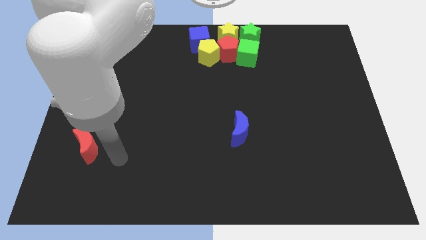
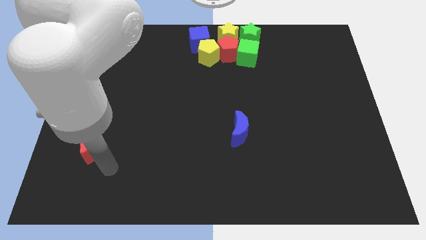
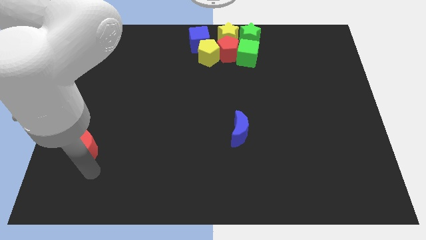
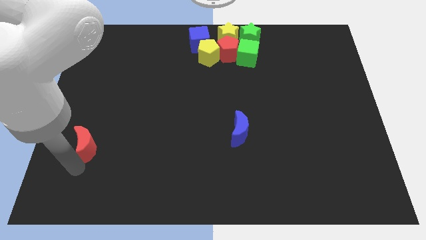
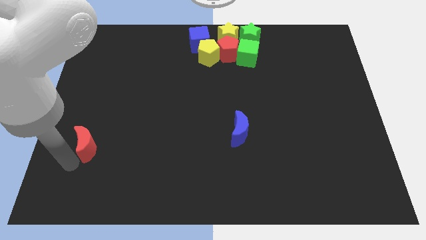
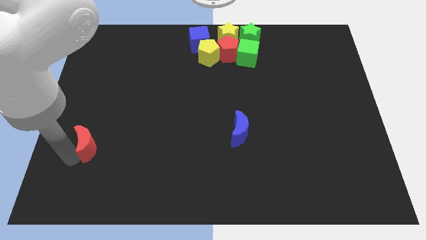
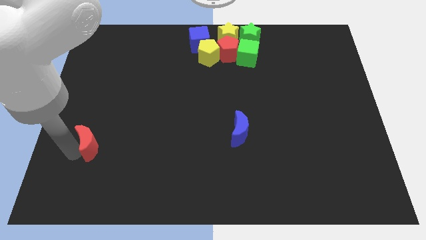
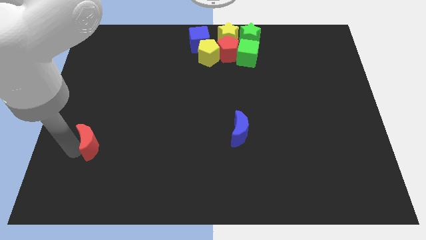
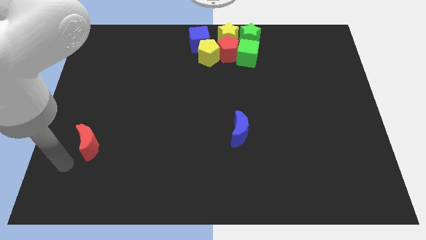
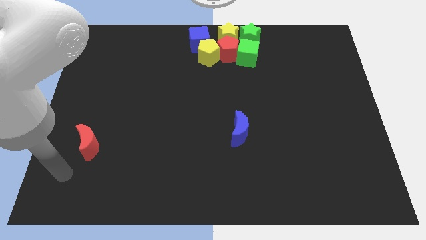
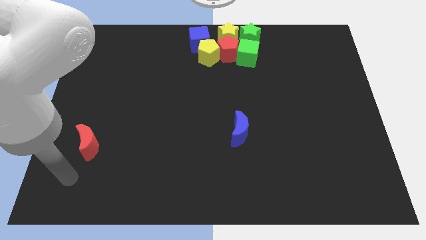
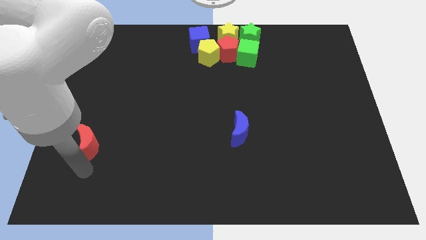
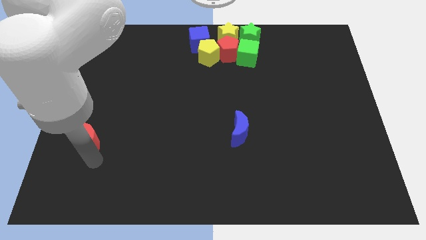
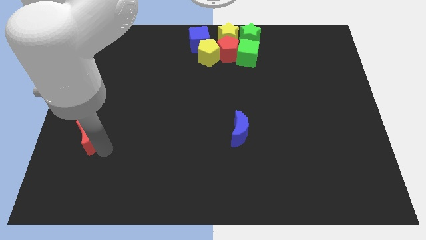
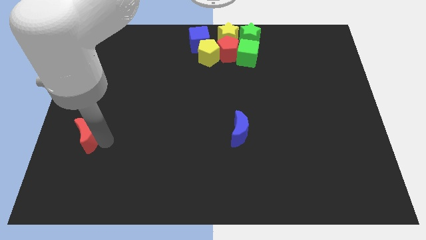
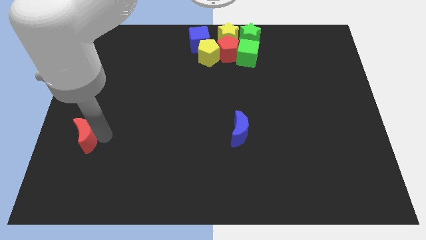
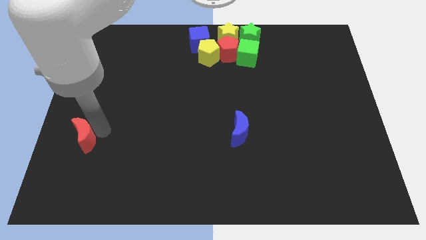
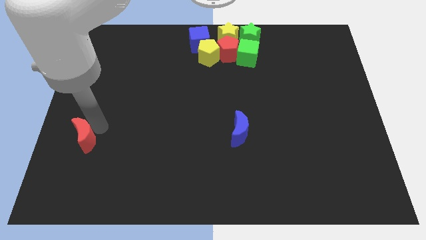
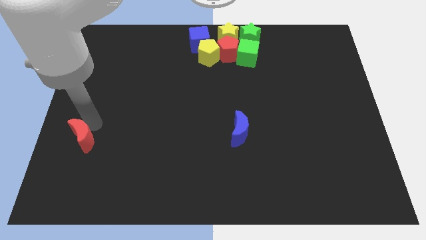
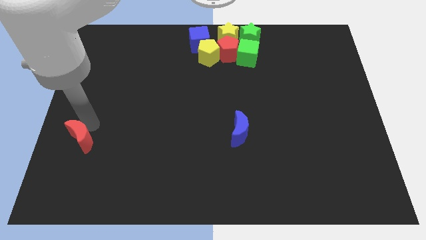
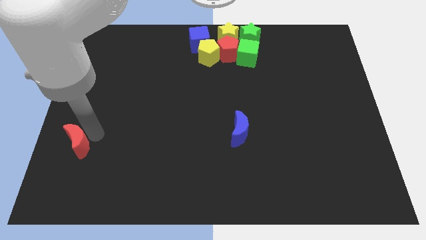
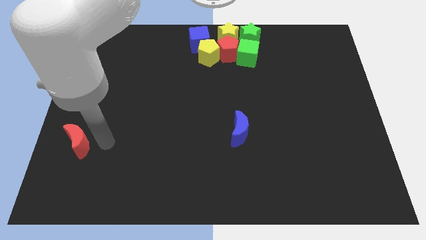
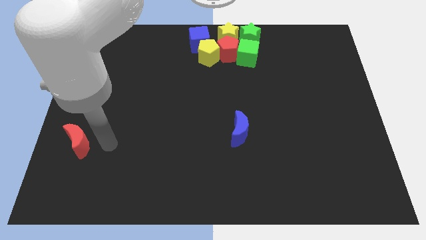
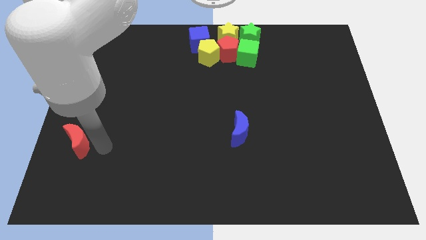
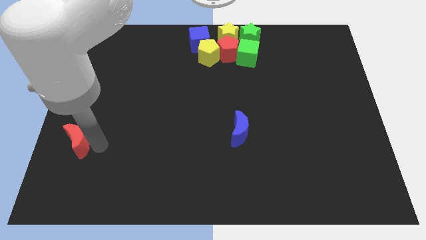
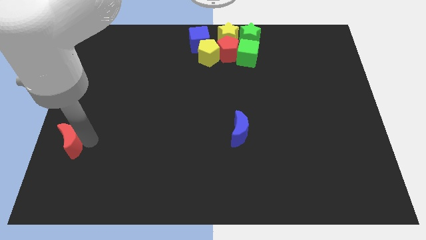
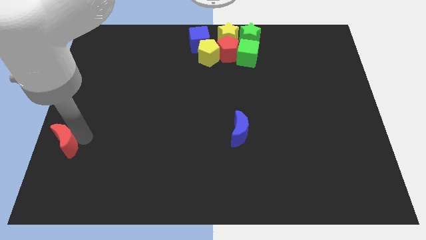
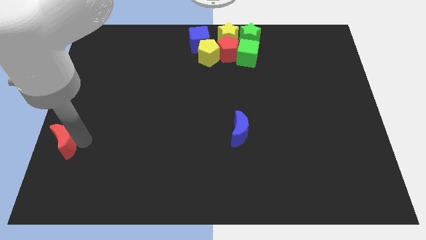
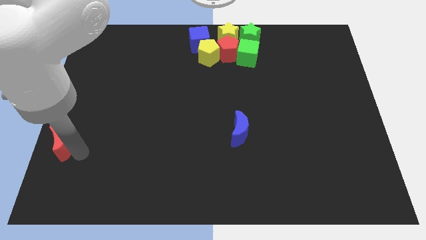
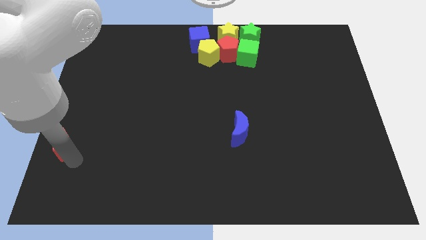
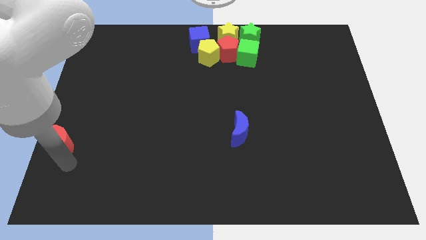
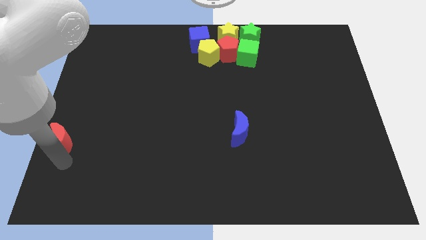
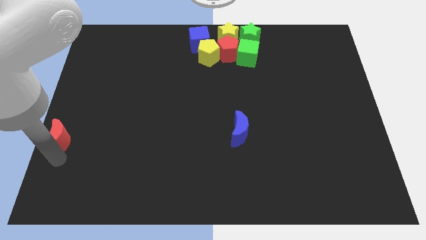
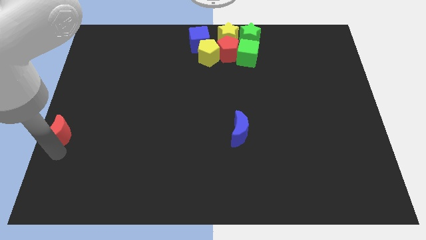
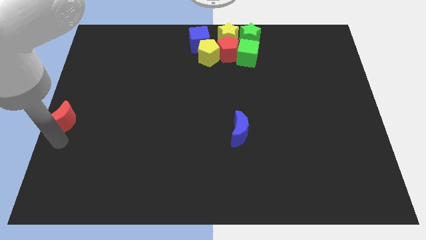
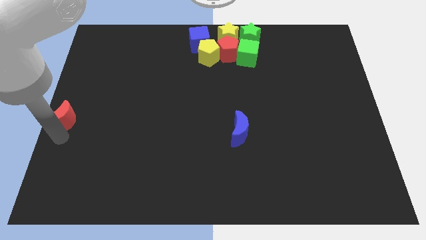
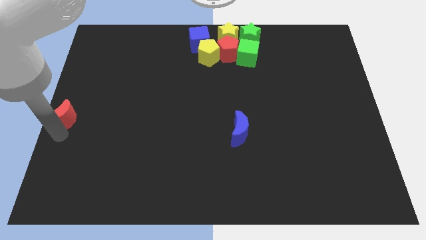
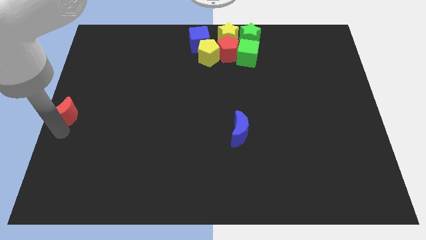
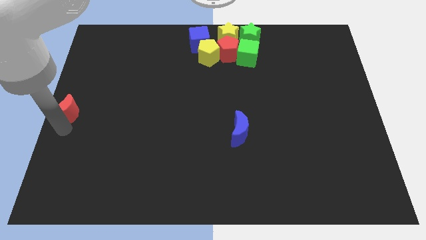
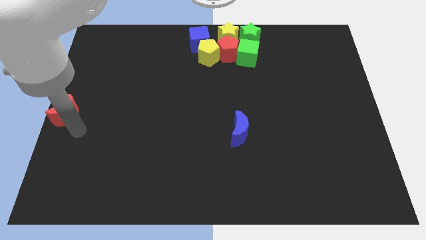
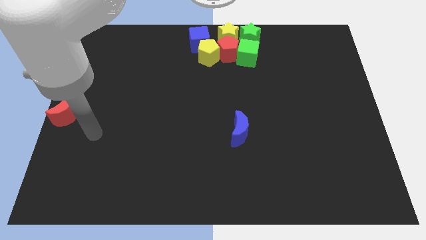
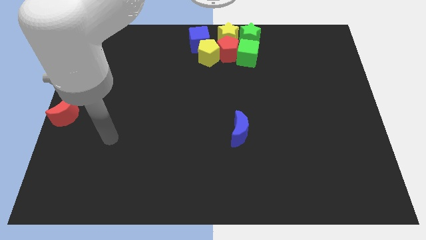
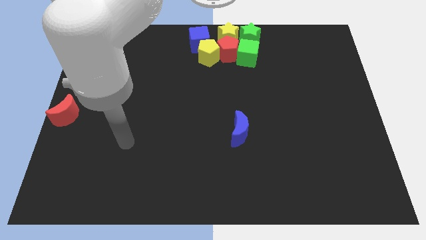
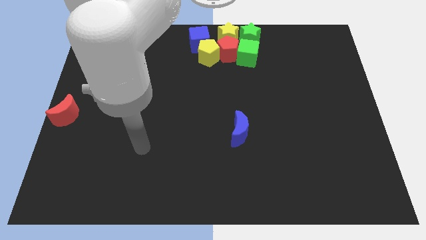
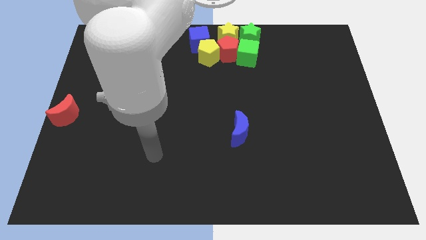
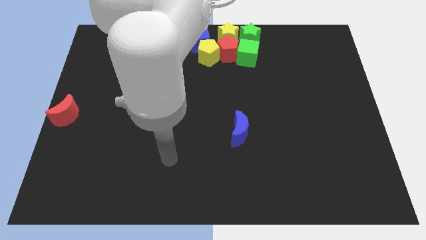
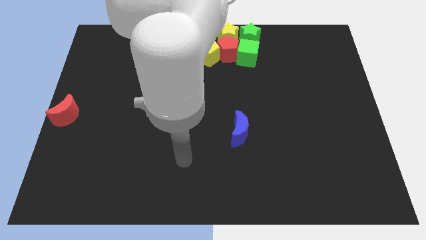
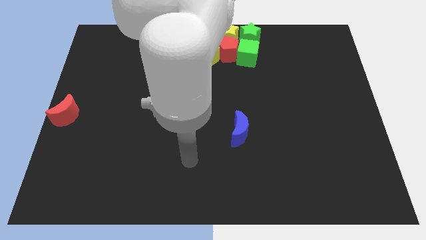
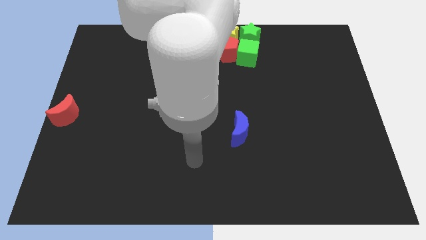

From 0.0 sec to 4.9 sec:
place the red moon to the left center

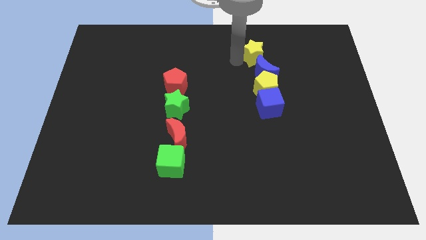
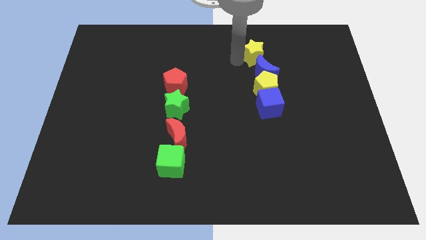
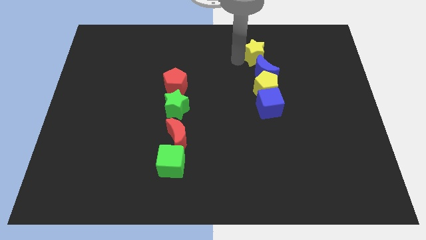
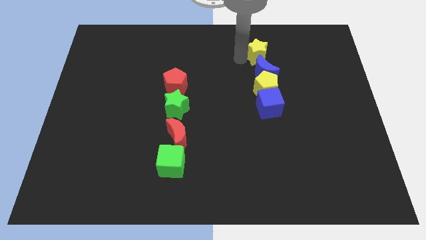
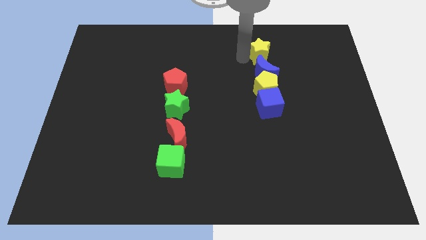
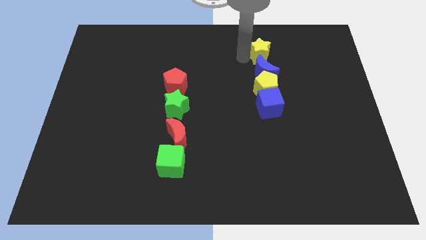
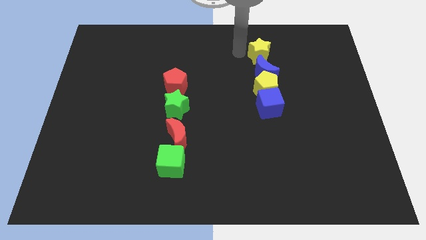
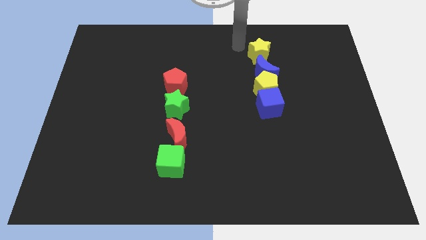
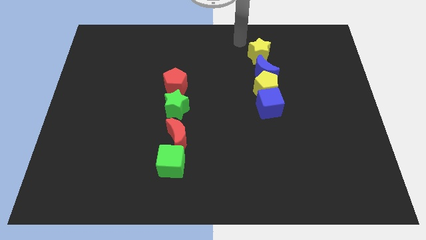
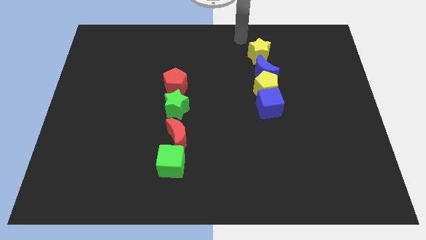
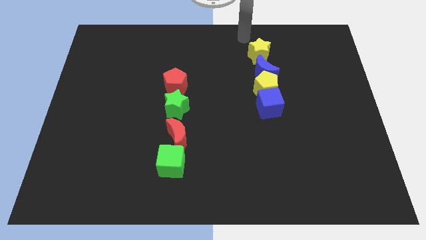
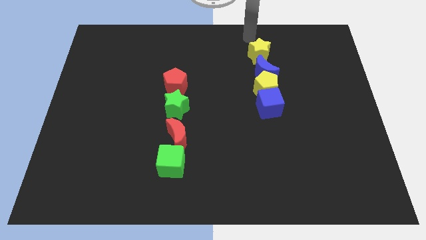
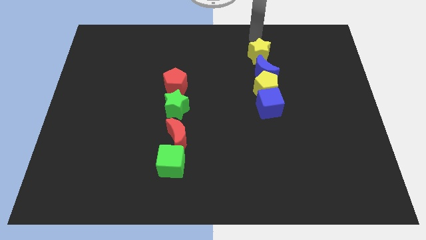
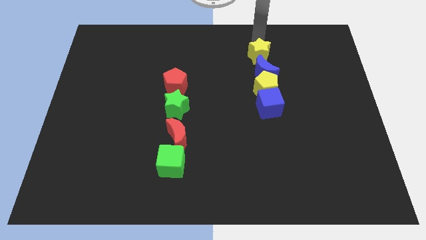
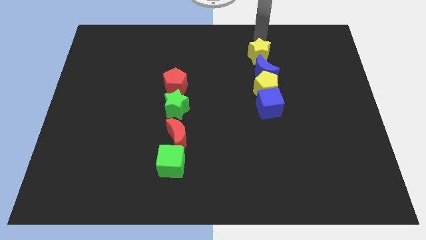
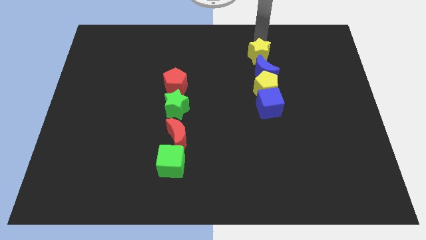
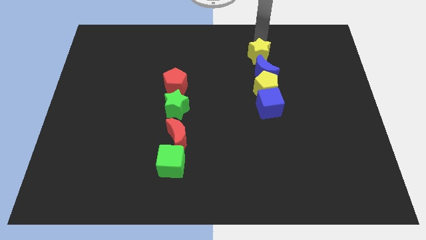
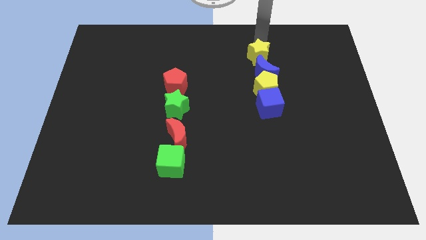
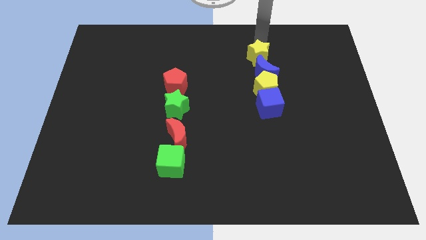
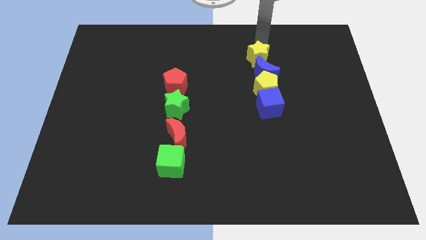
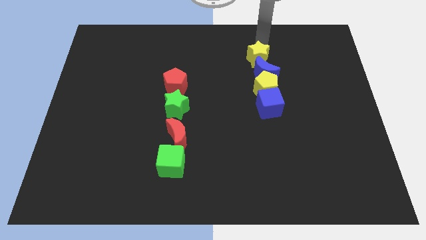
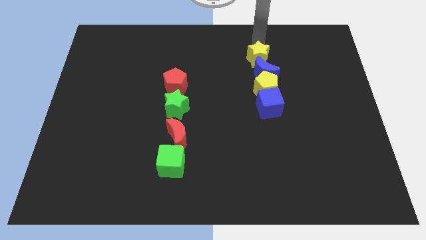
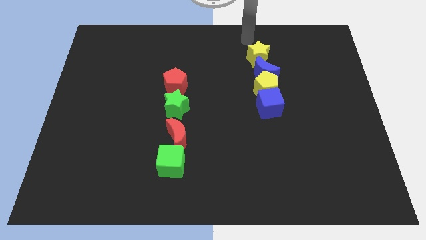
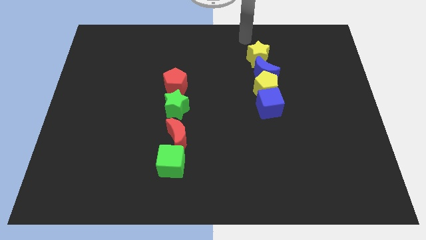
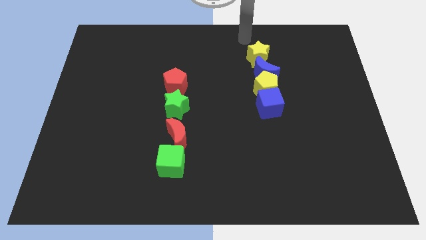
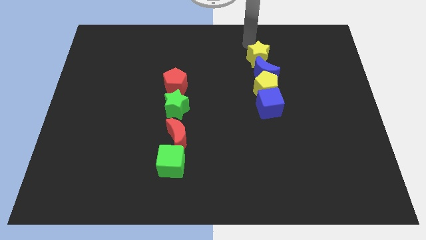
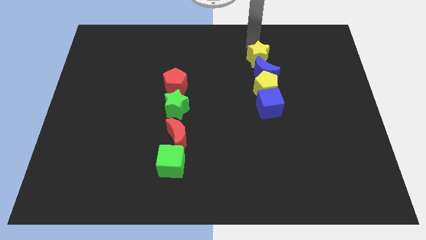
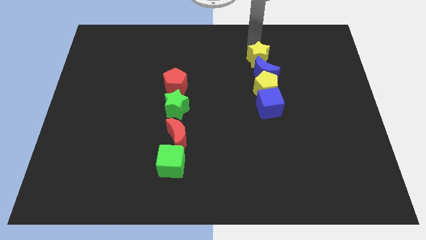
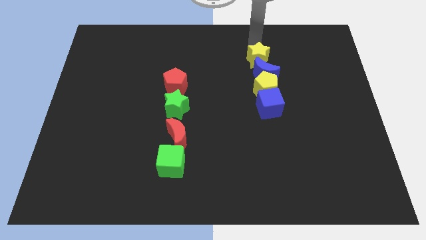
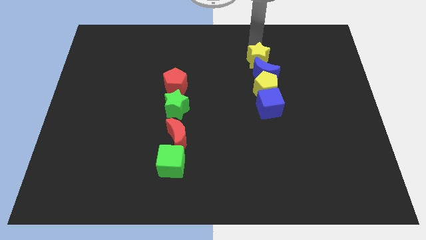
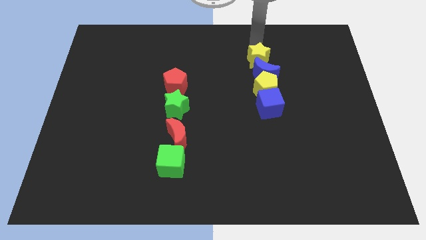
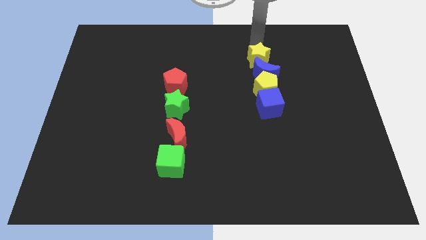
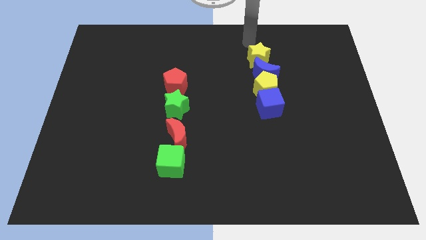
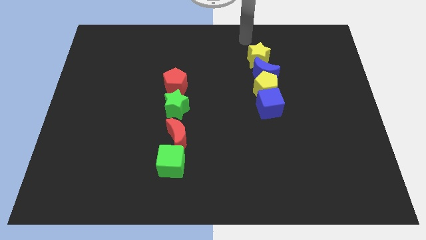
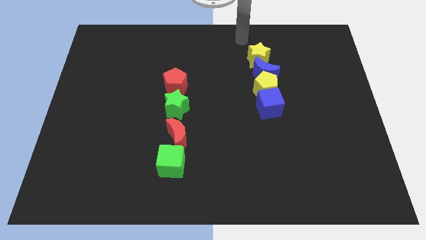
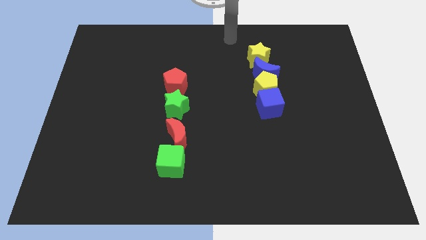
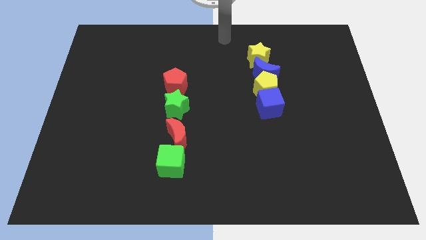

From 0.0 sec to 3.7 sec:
place the yellow star on the top of blue moon

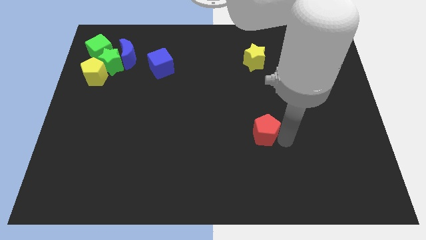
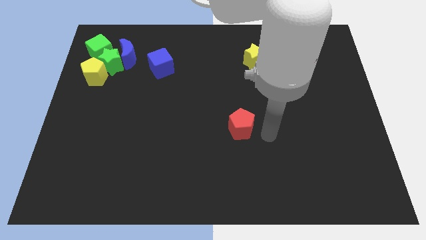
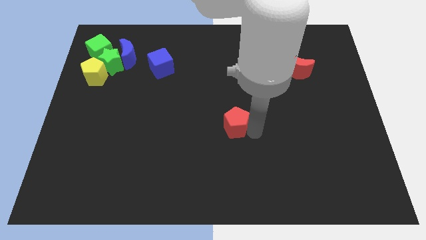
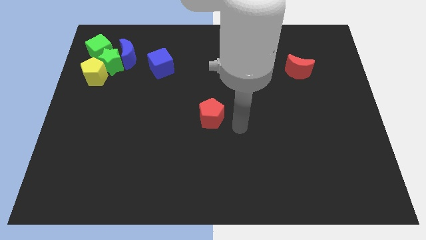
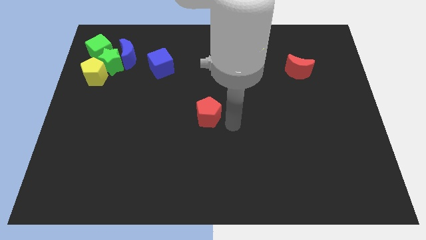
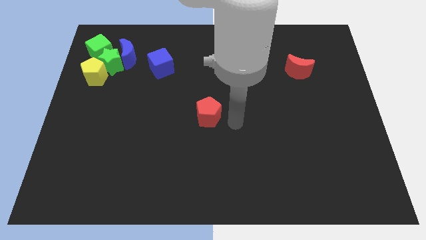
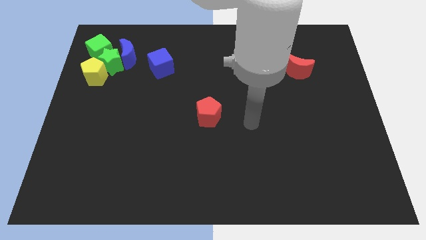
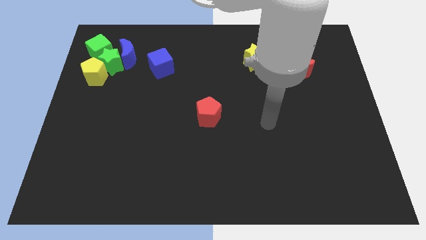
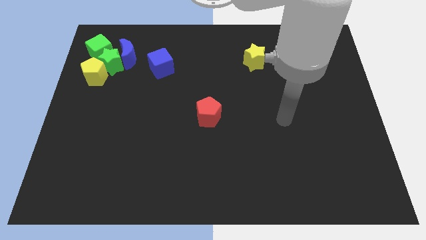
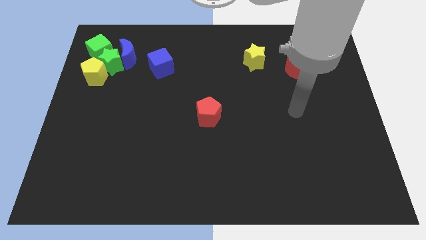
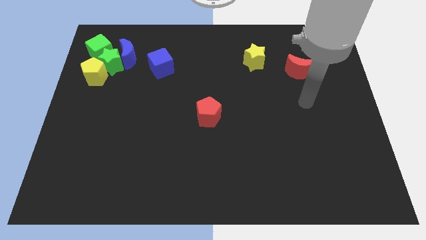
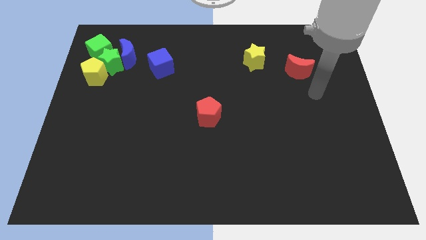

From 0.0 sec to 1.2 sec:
place the red pentagon at the center of the board
